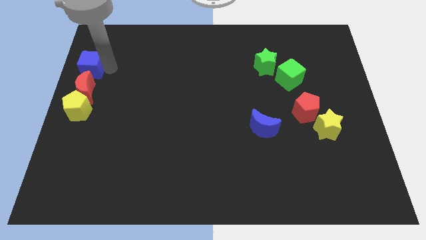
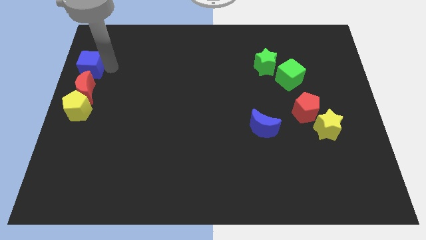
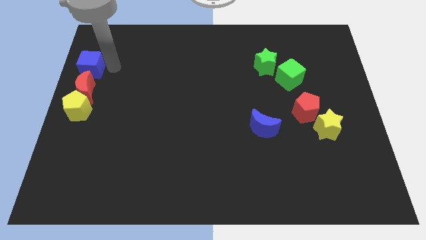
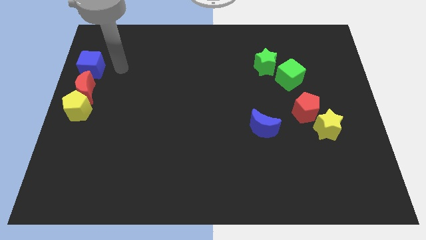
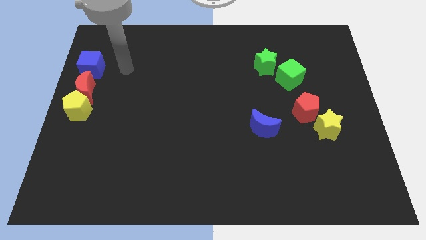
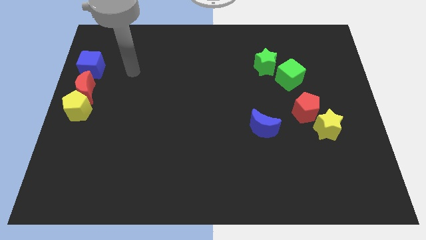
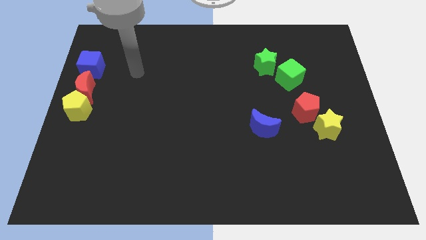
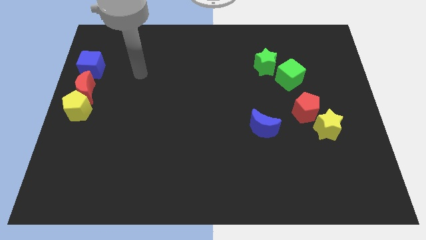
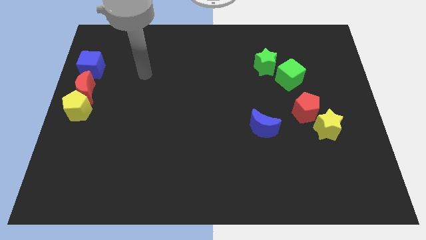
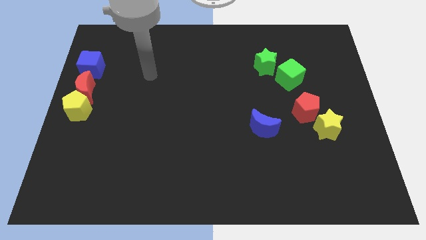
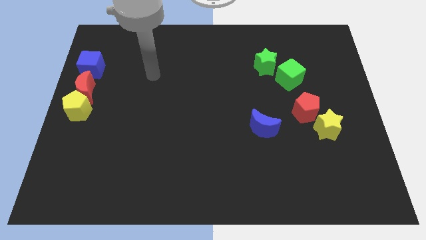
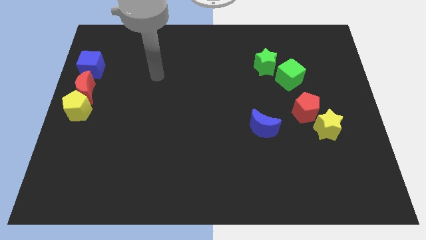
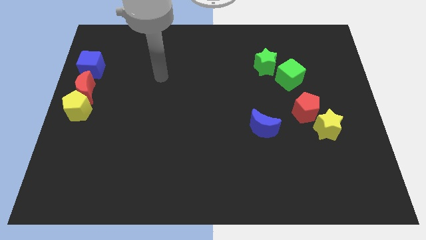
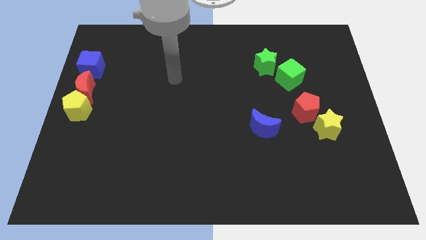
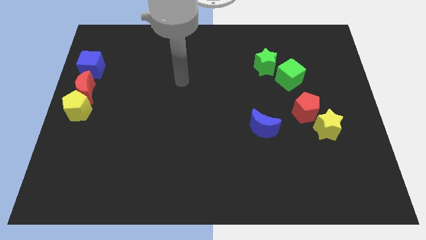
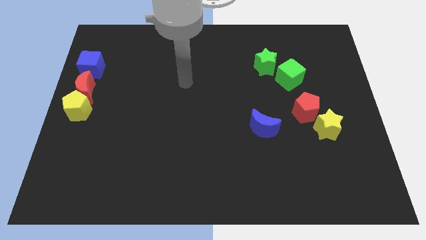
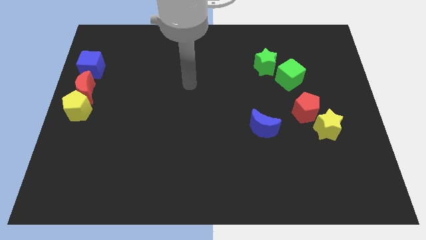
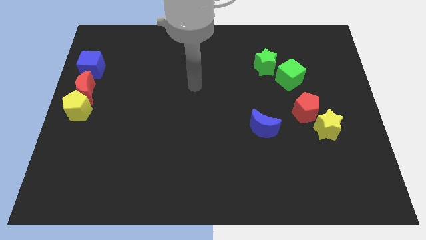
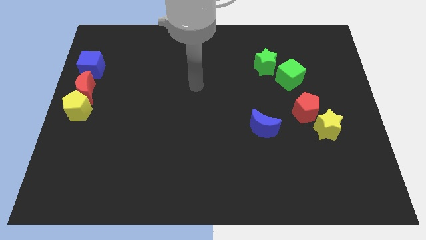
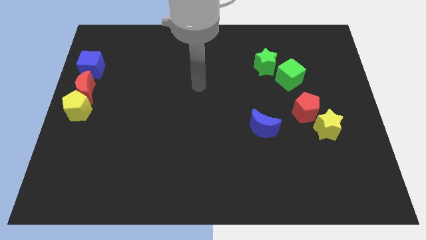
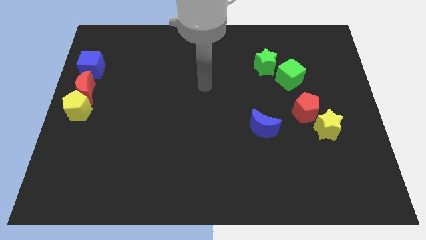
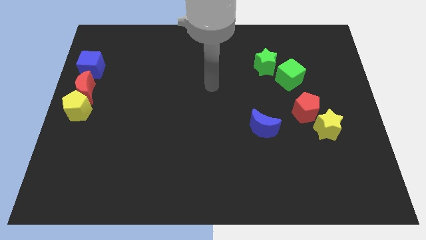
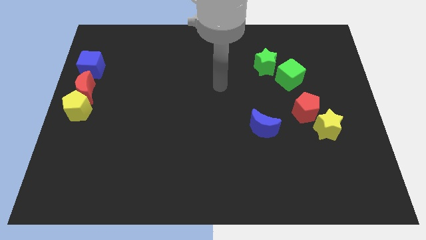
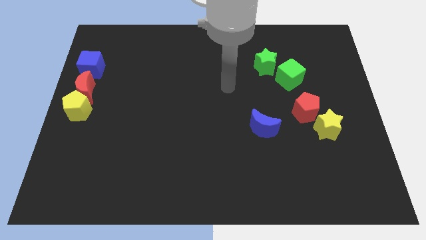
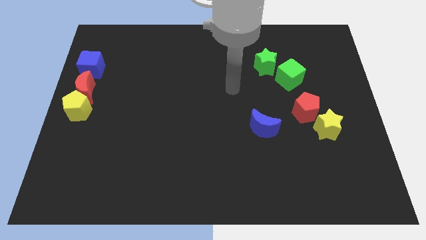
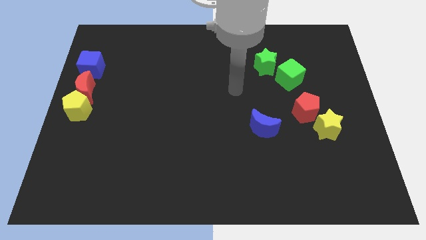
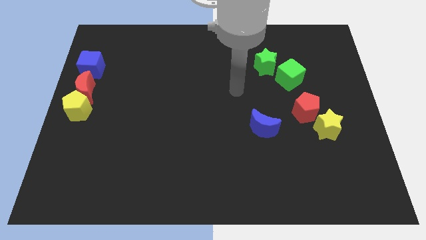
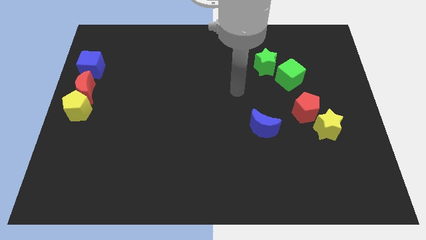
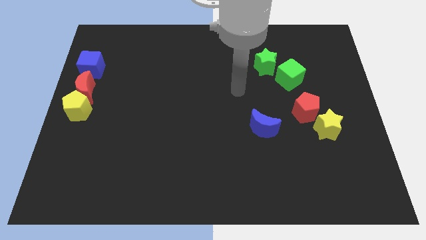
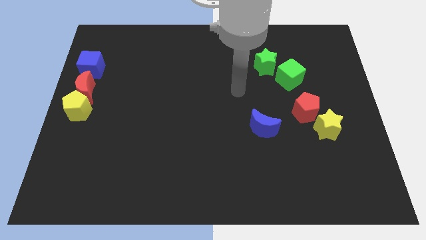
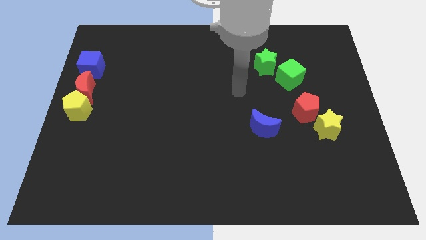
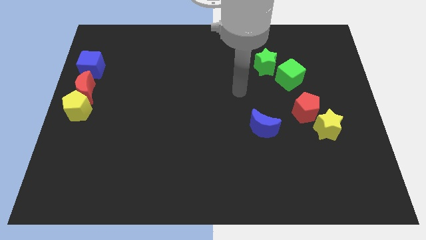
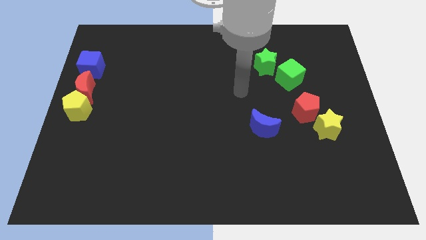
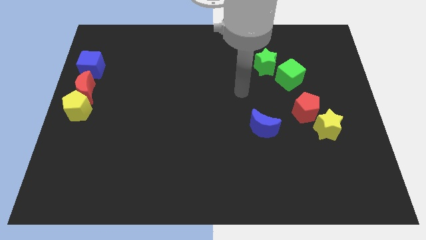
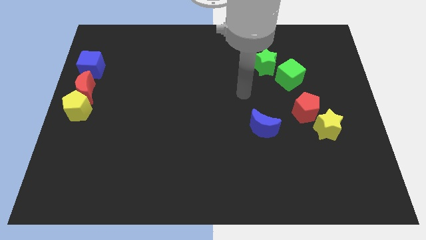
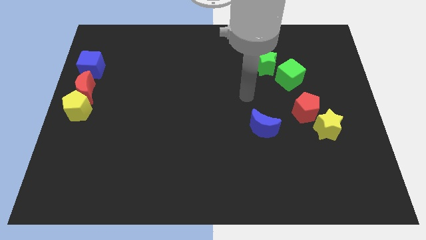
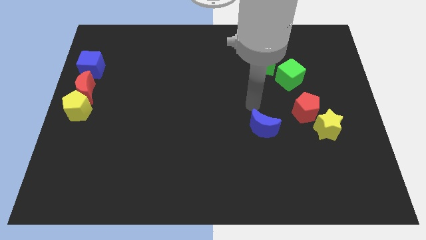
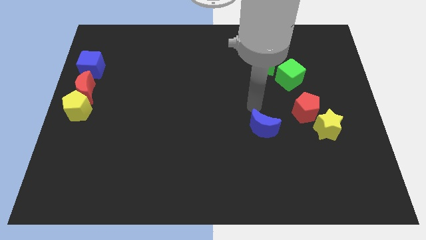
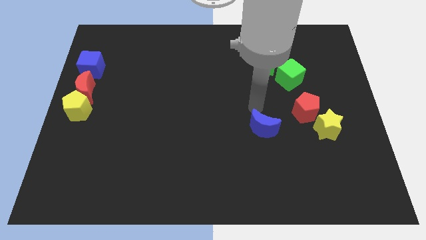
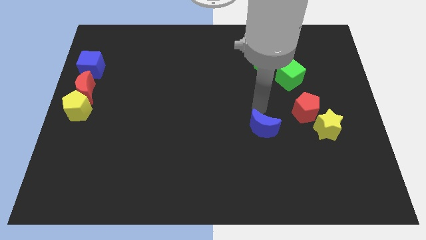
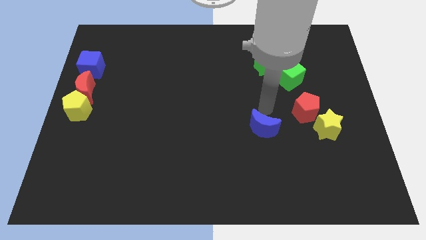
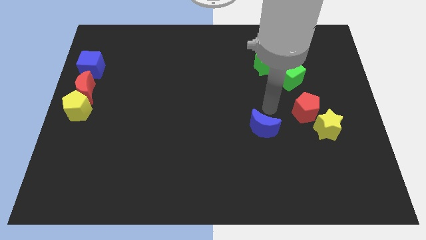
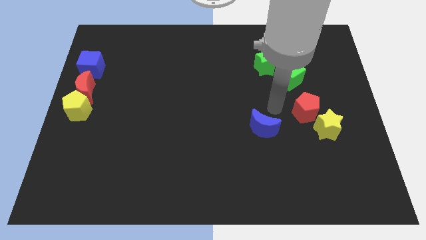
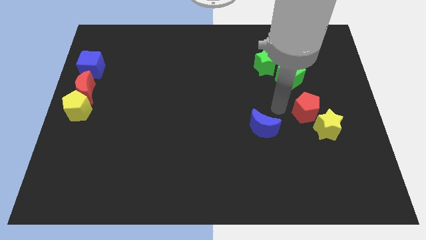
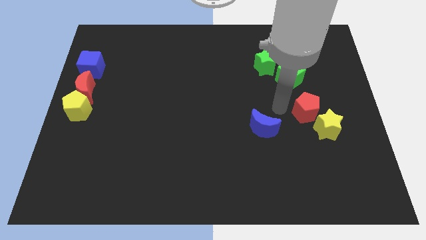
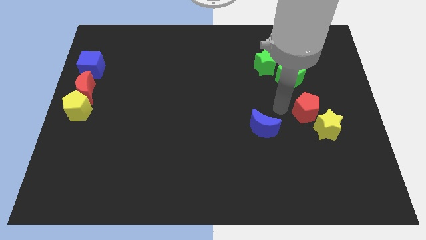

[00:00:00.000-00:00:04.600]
move your arm towards the red crescent

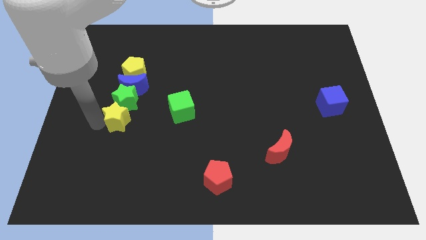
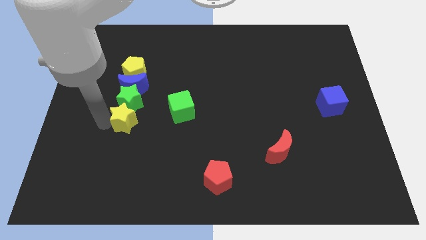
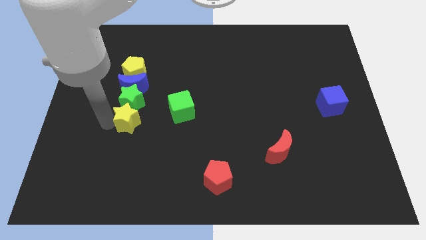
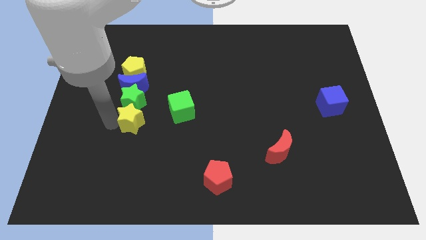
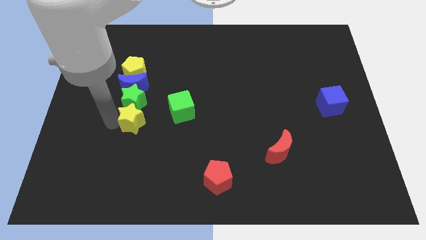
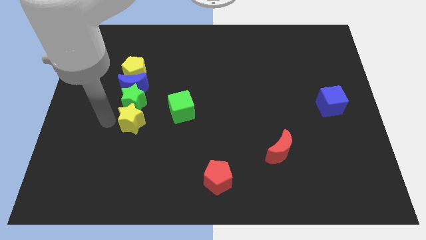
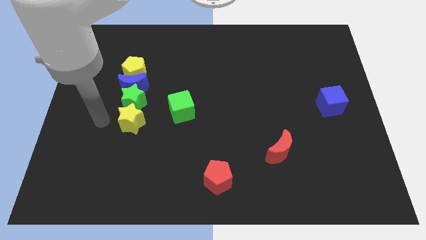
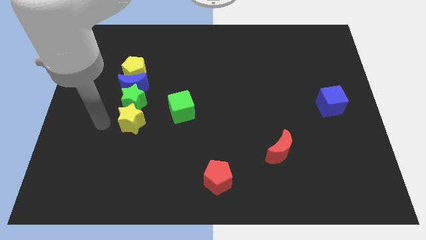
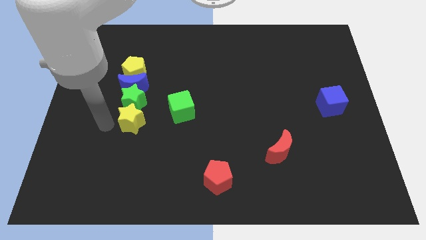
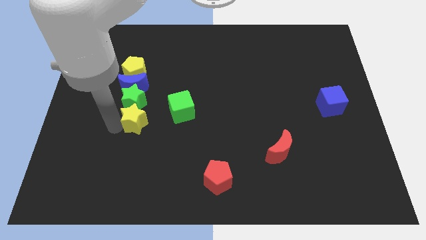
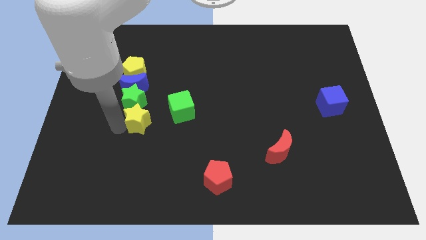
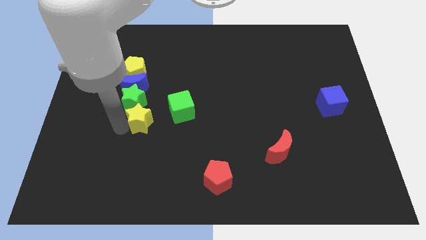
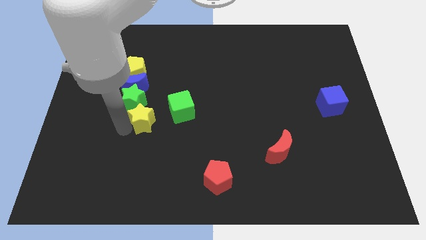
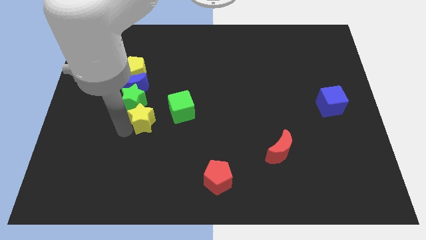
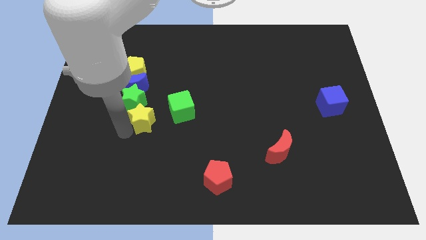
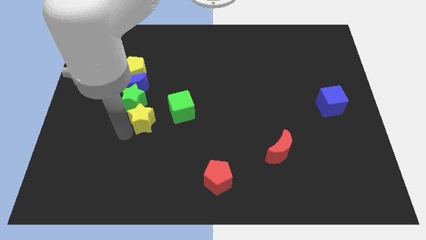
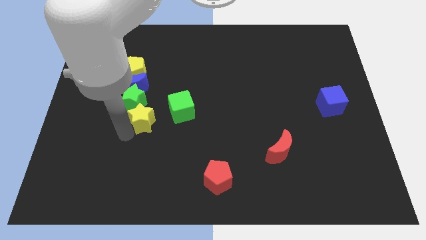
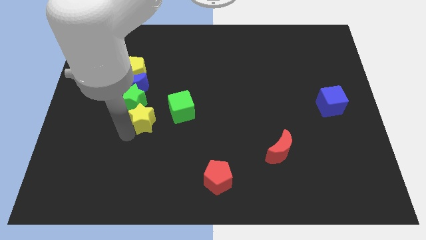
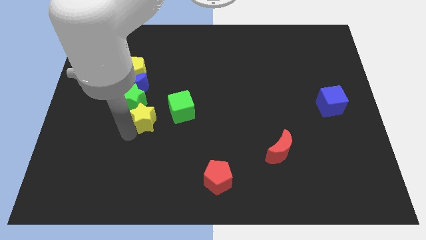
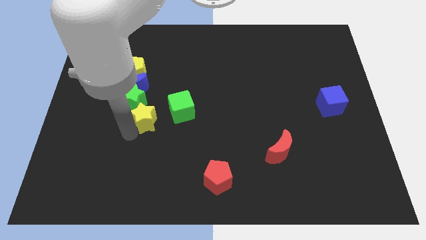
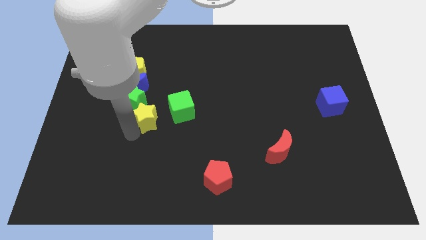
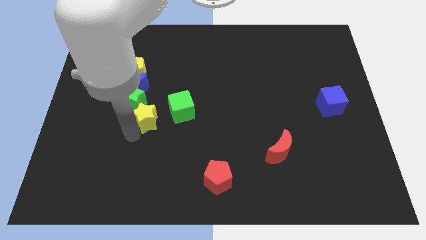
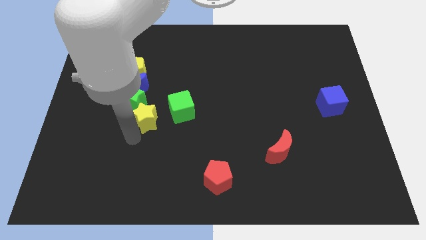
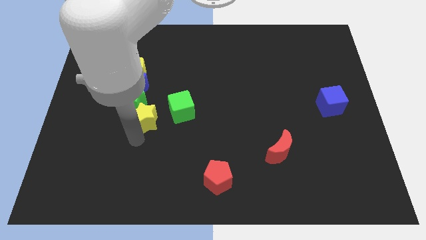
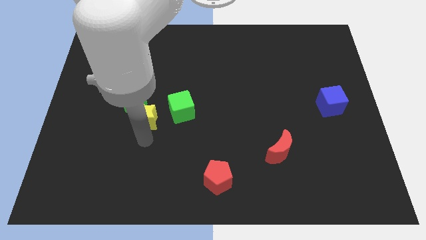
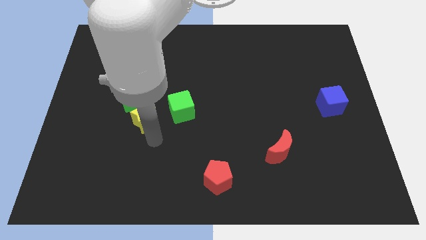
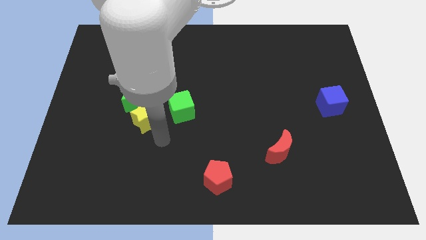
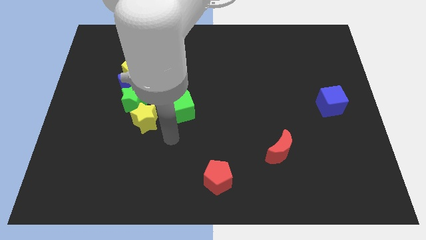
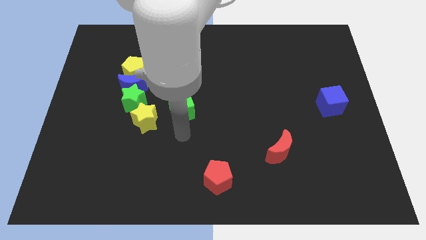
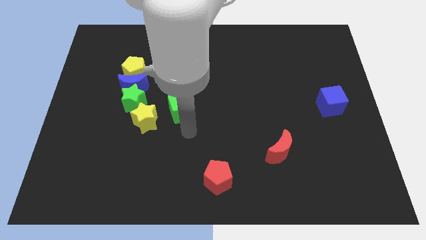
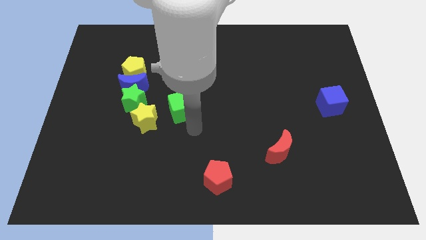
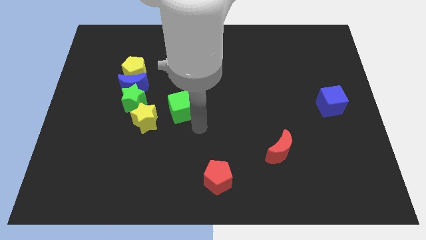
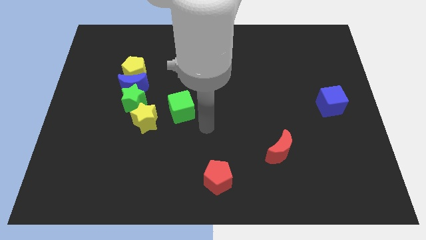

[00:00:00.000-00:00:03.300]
push the yellow star towards the green cube

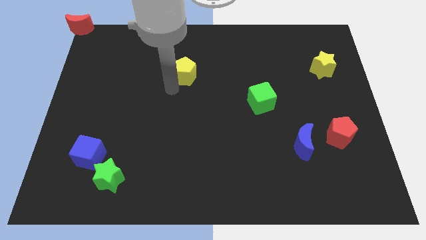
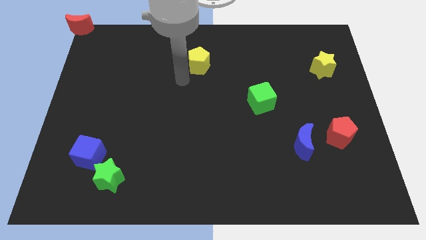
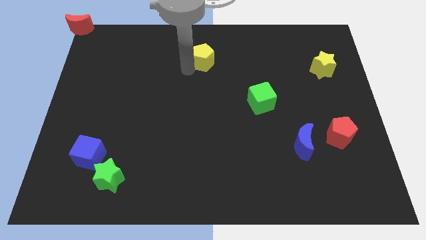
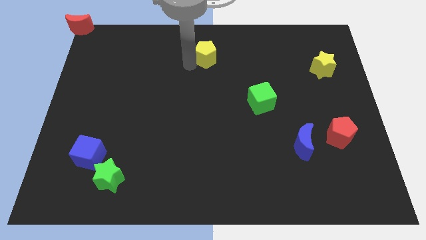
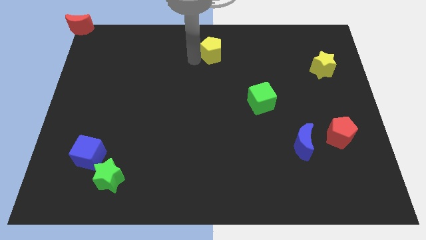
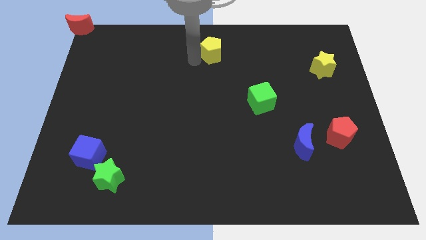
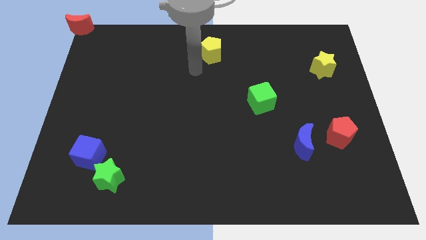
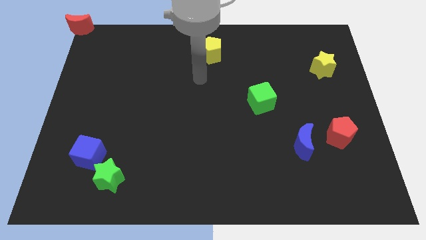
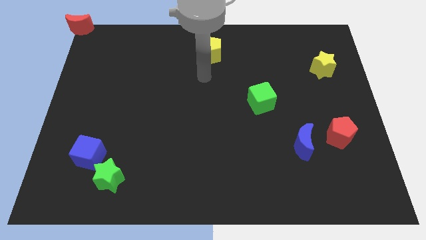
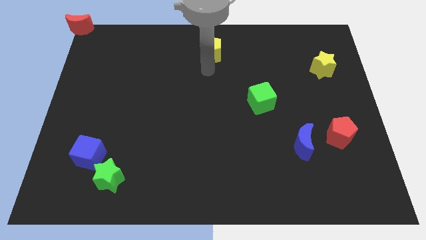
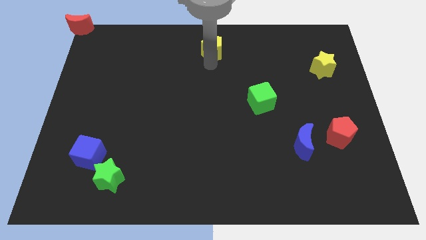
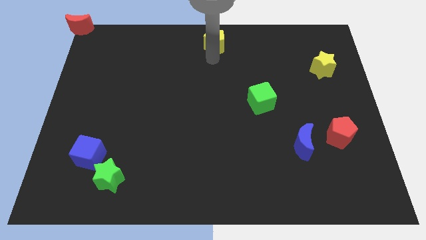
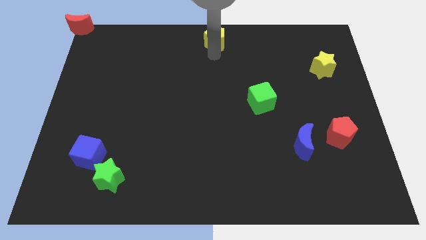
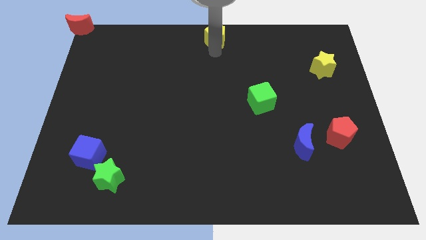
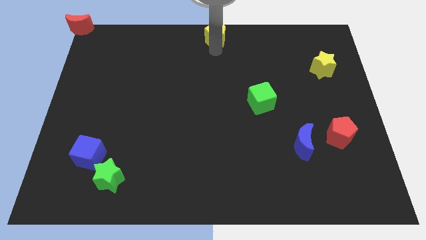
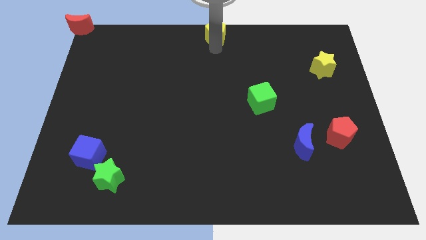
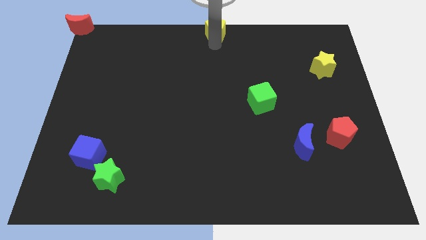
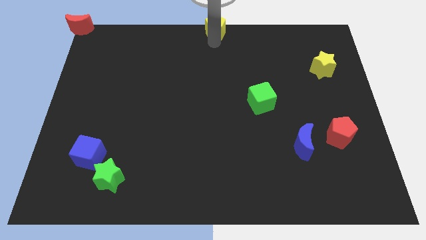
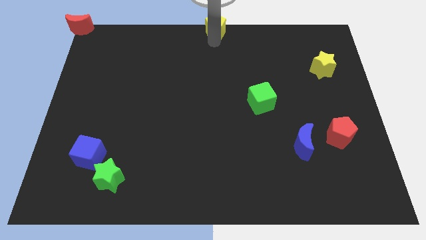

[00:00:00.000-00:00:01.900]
push the yellow pentagon to the top center of the board
